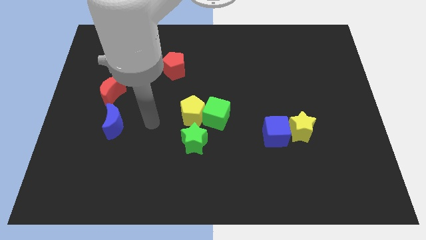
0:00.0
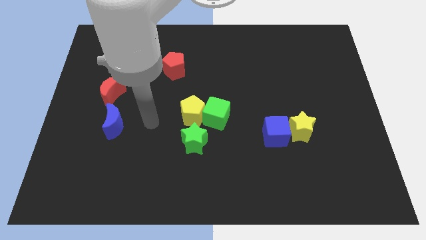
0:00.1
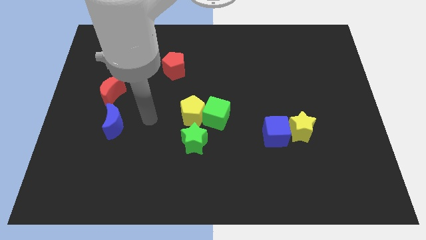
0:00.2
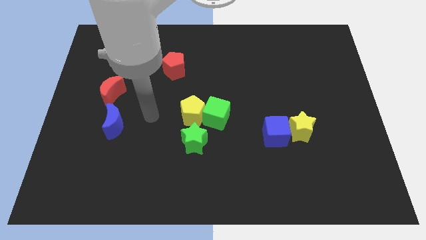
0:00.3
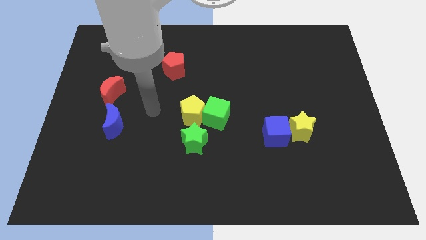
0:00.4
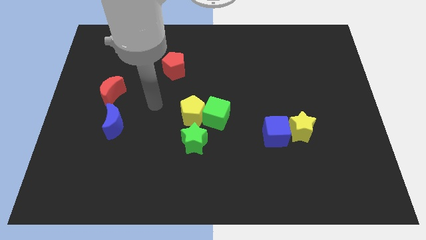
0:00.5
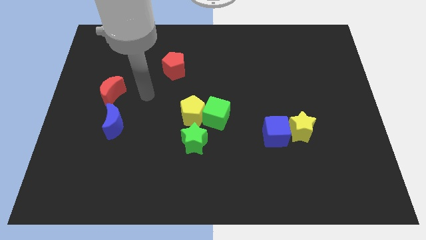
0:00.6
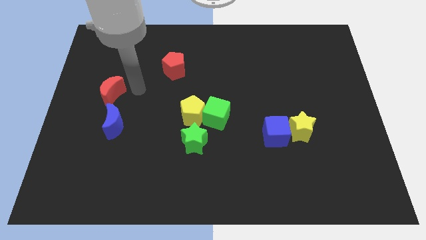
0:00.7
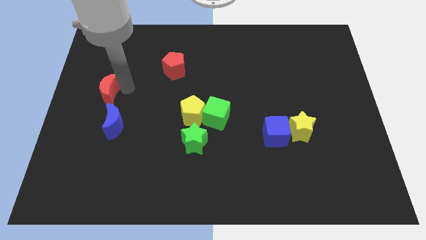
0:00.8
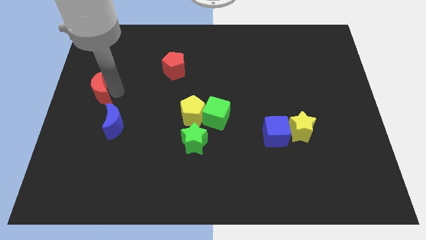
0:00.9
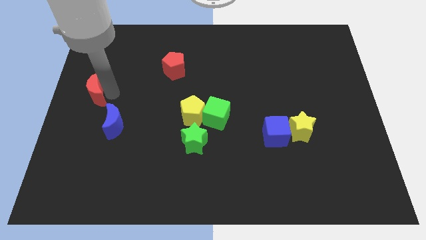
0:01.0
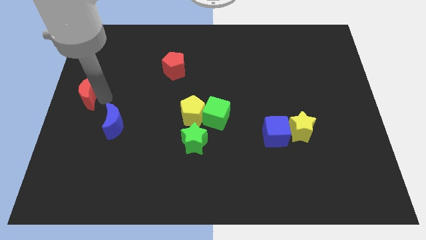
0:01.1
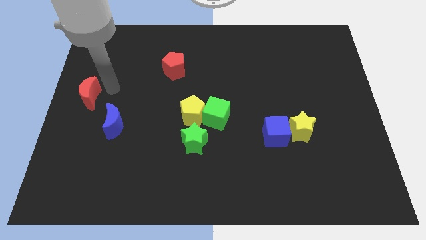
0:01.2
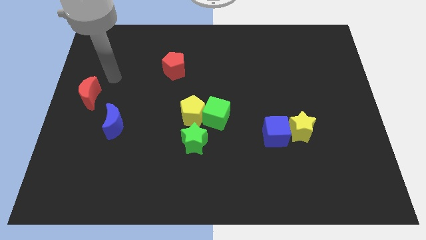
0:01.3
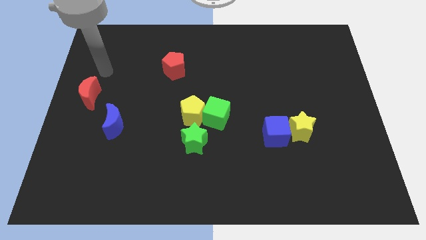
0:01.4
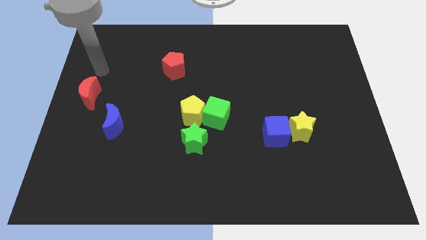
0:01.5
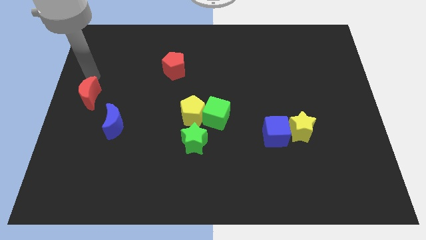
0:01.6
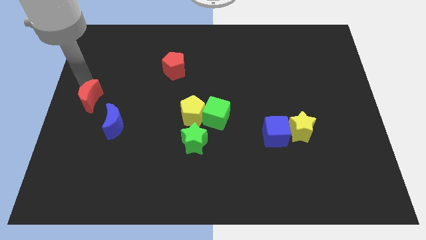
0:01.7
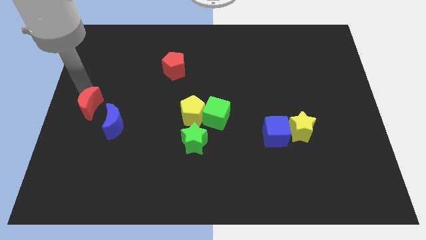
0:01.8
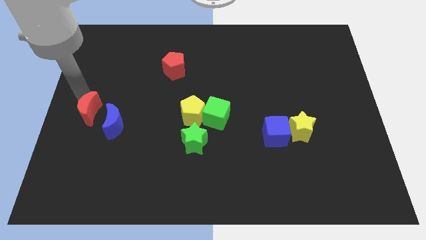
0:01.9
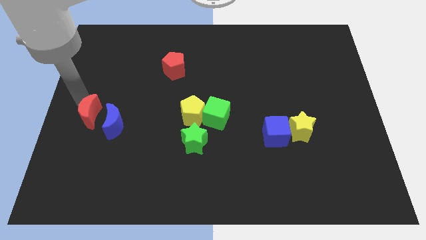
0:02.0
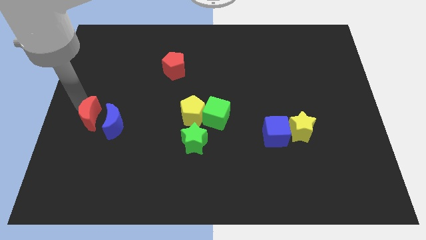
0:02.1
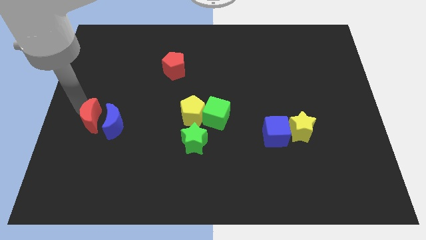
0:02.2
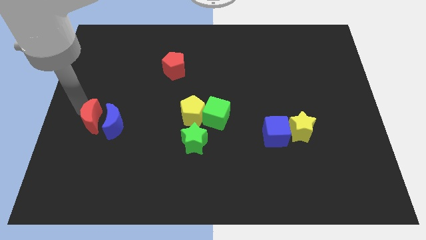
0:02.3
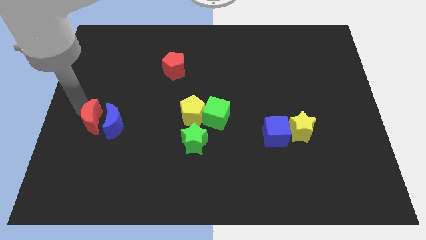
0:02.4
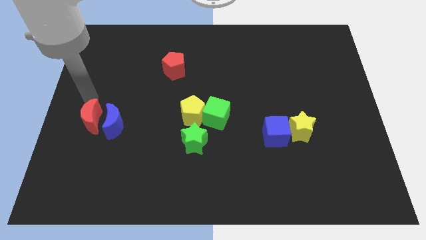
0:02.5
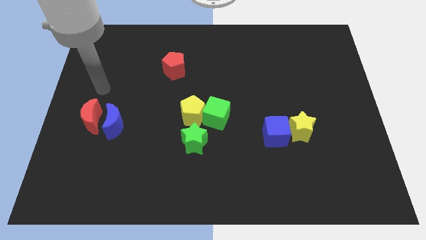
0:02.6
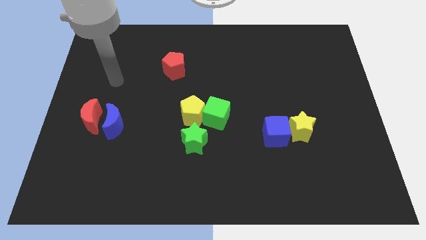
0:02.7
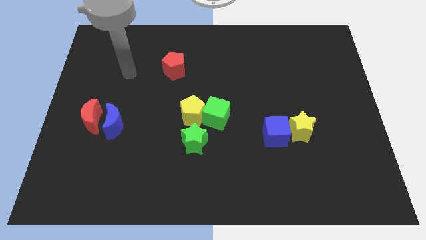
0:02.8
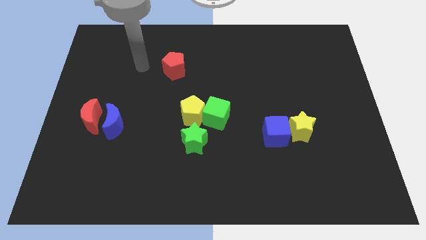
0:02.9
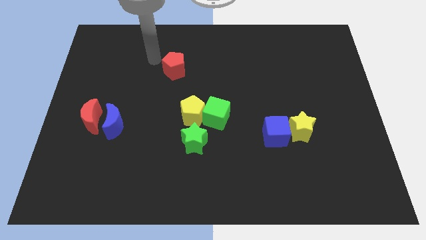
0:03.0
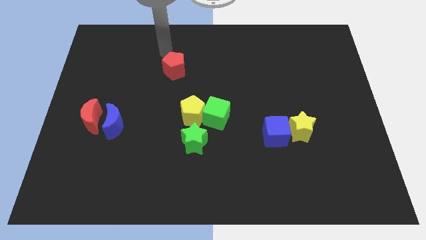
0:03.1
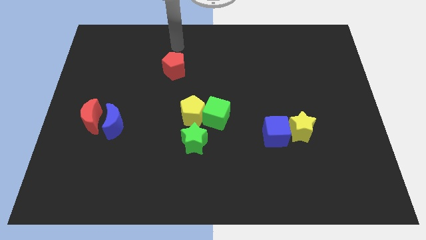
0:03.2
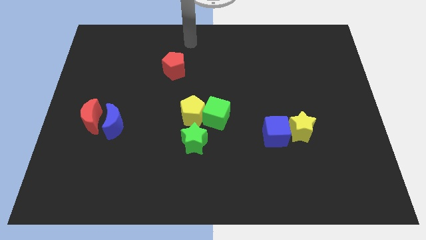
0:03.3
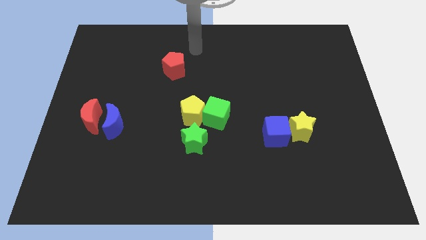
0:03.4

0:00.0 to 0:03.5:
push the red crescent away from the blue crescent

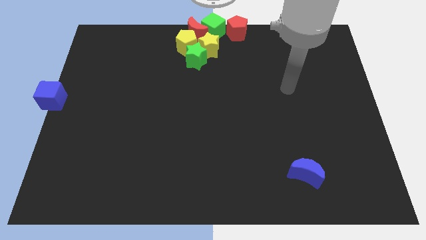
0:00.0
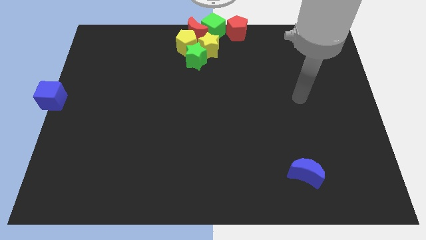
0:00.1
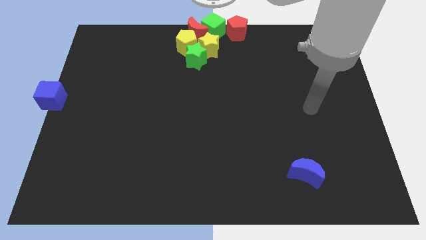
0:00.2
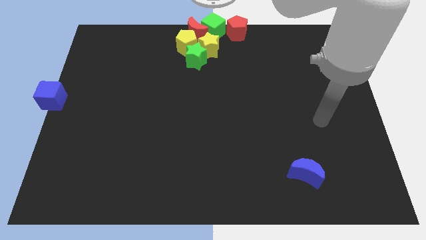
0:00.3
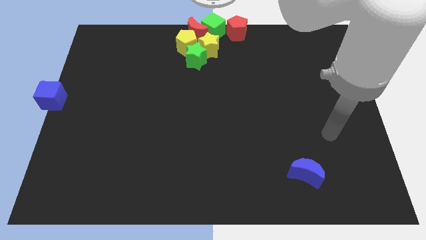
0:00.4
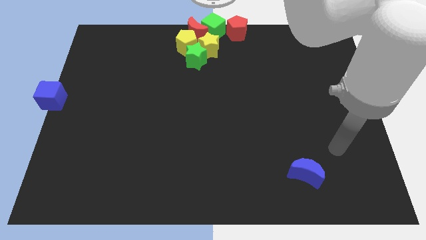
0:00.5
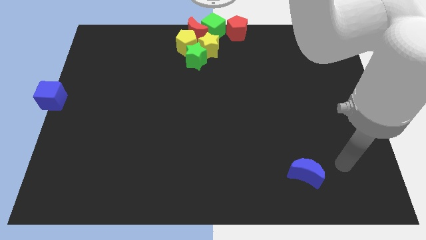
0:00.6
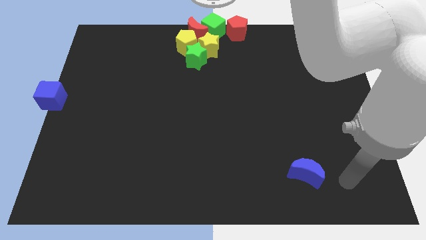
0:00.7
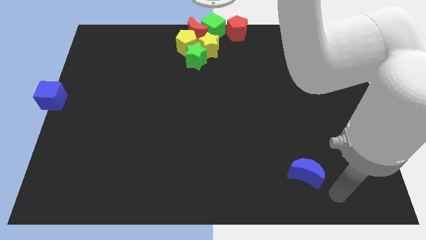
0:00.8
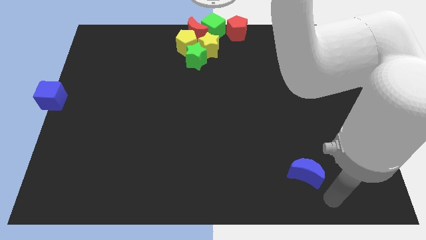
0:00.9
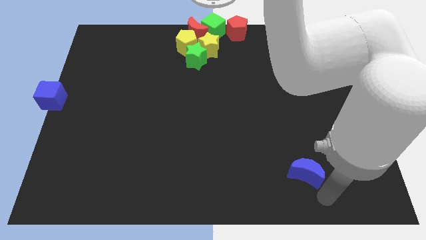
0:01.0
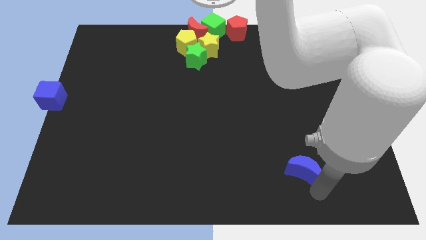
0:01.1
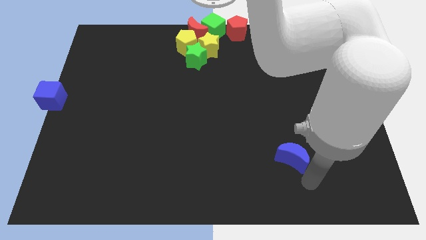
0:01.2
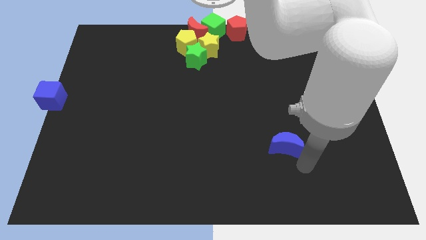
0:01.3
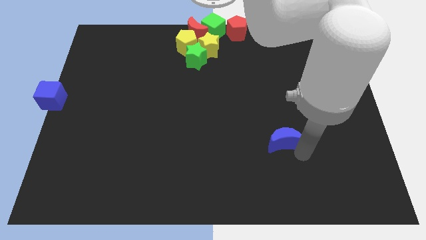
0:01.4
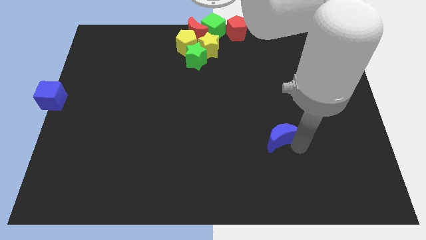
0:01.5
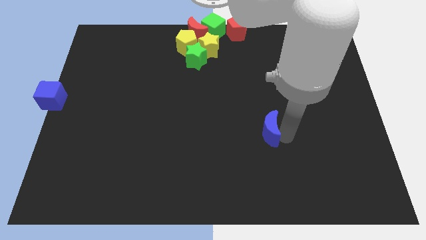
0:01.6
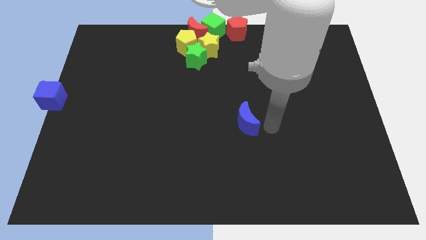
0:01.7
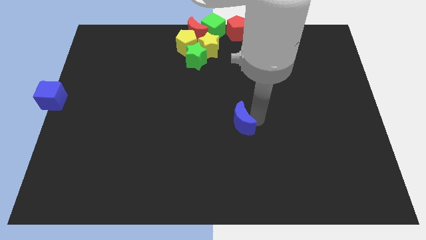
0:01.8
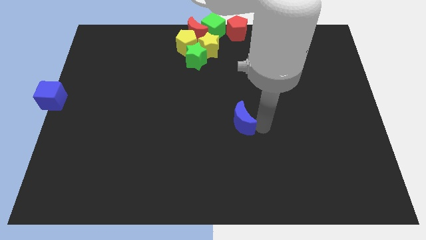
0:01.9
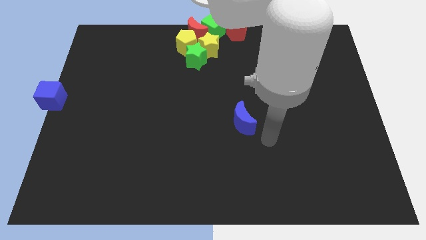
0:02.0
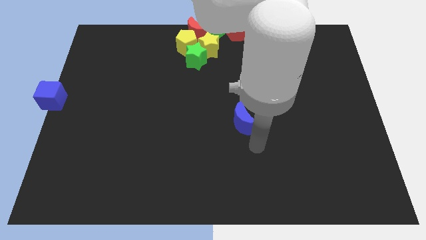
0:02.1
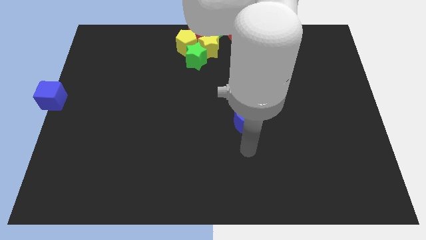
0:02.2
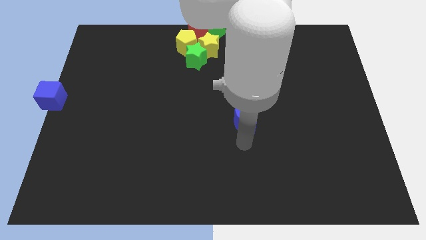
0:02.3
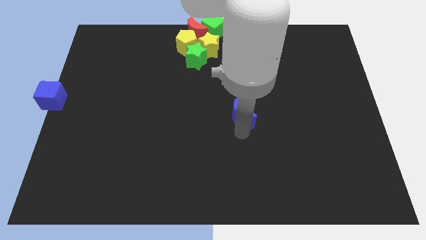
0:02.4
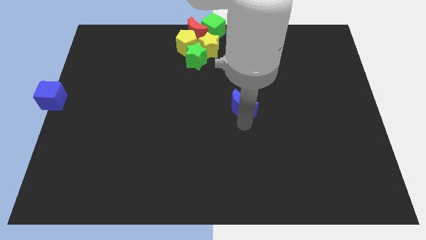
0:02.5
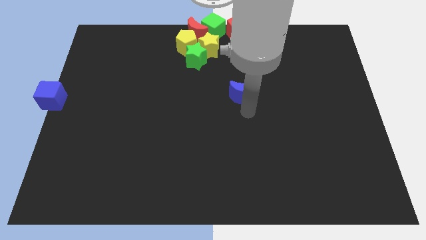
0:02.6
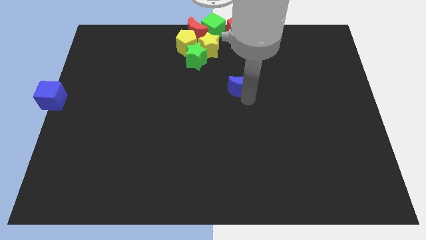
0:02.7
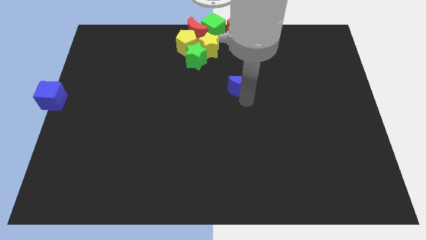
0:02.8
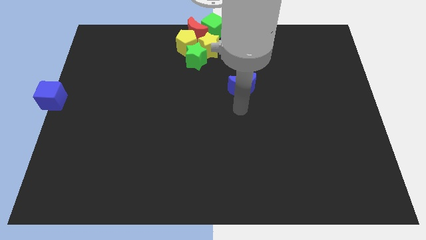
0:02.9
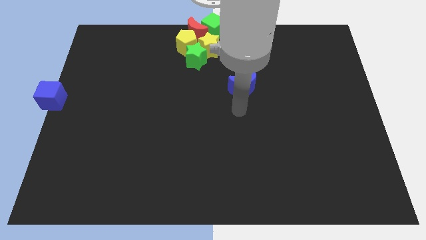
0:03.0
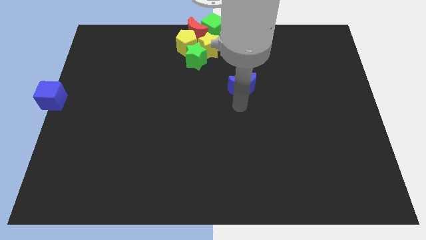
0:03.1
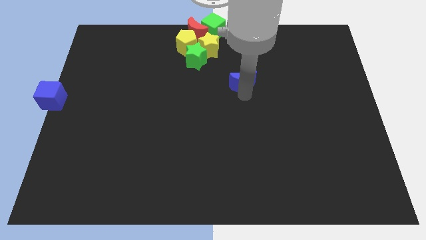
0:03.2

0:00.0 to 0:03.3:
move the blue moon diagonal below stars

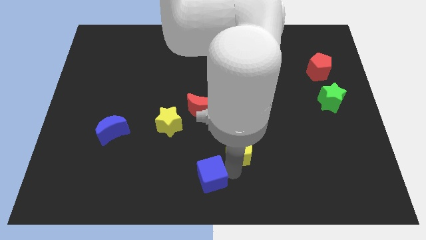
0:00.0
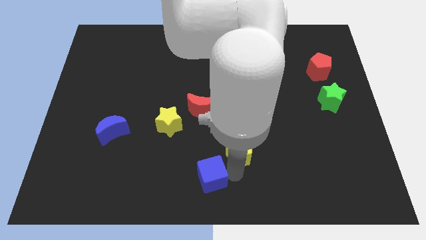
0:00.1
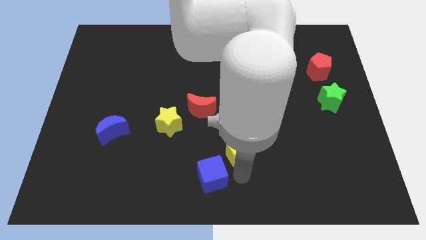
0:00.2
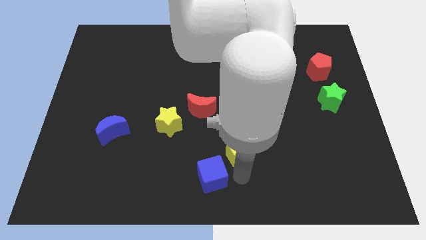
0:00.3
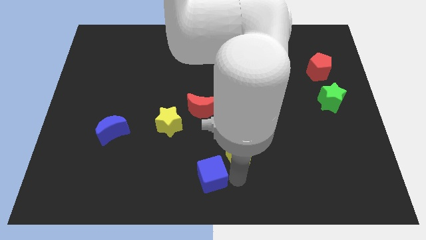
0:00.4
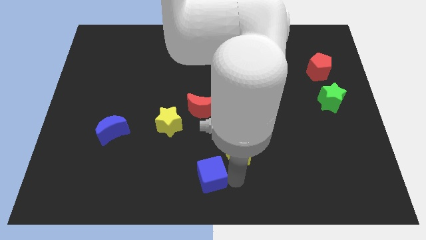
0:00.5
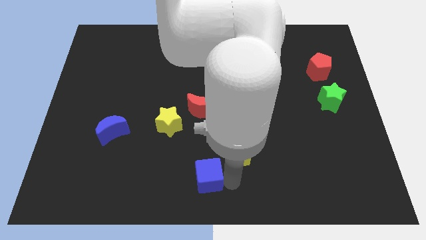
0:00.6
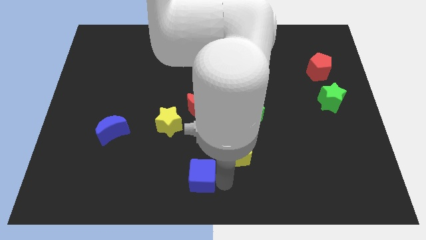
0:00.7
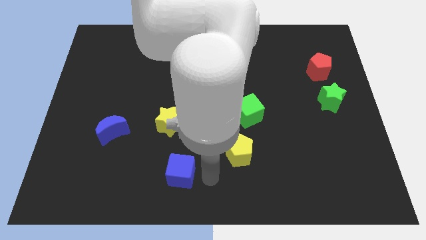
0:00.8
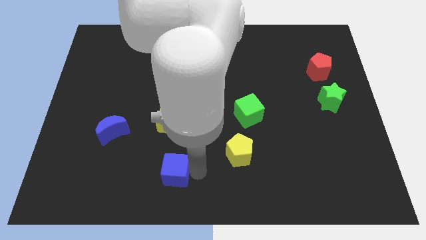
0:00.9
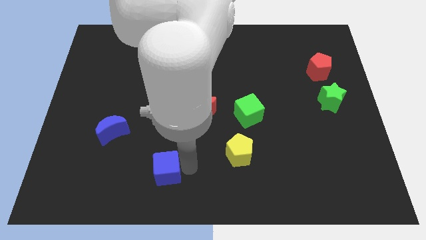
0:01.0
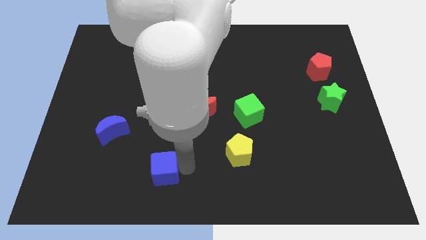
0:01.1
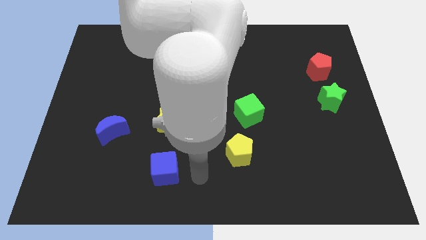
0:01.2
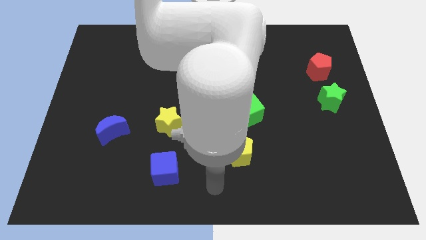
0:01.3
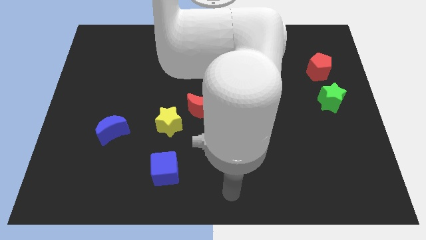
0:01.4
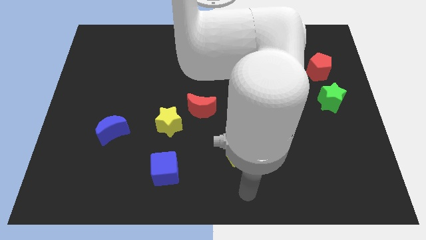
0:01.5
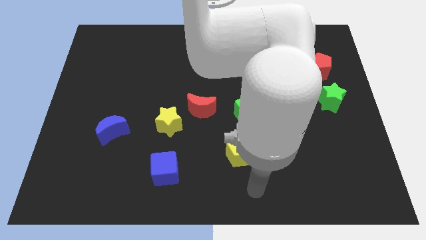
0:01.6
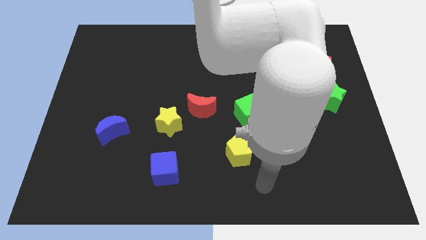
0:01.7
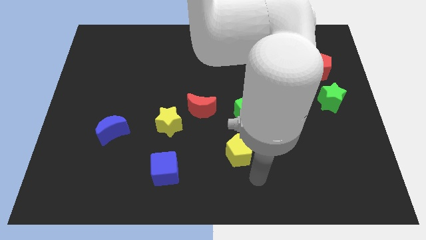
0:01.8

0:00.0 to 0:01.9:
move the blue cube below the yellow star

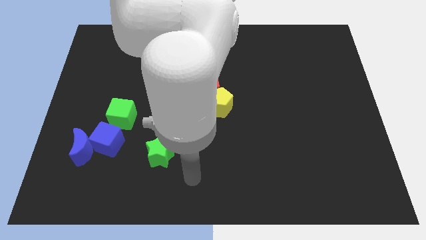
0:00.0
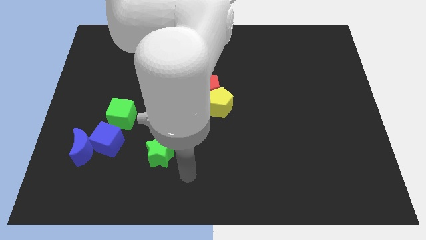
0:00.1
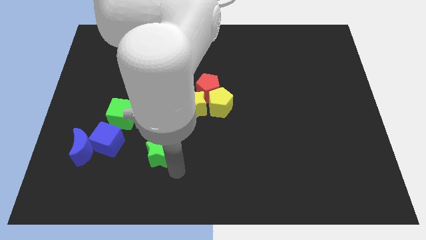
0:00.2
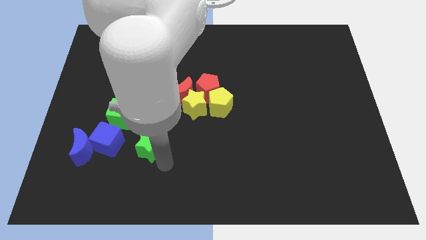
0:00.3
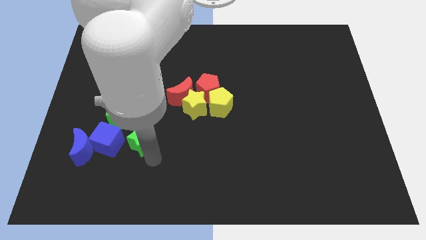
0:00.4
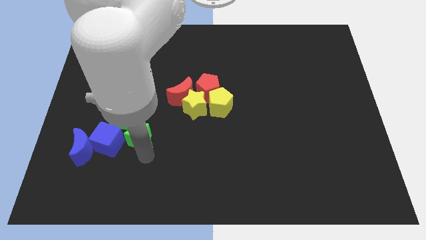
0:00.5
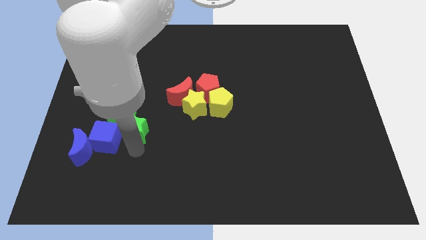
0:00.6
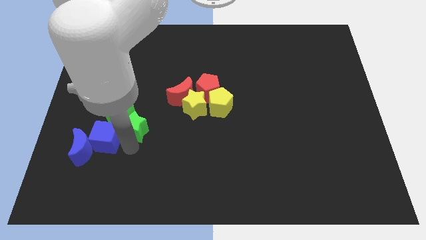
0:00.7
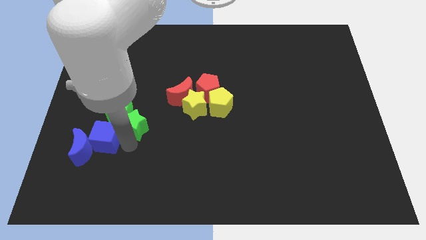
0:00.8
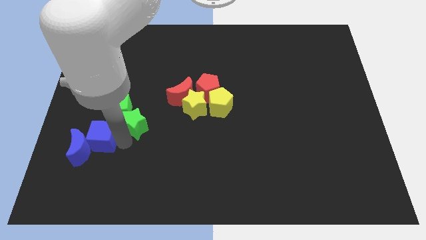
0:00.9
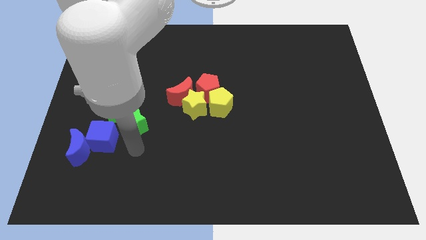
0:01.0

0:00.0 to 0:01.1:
place green star near to green cube
